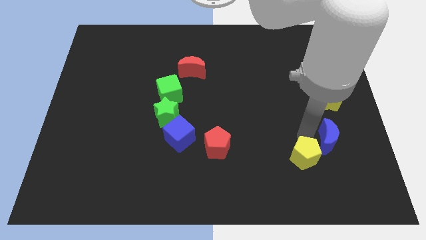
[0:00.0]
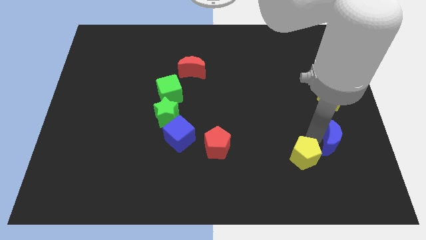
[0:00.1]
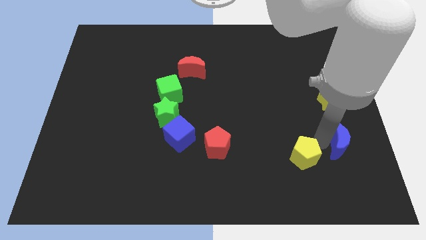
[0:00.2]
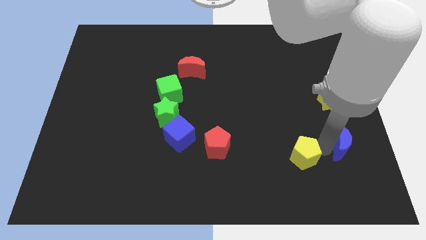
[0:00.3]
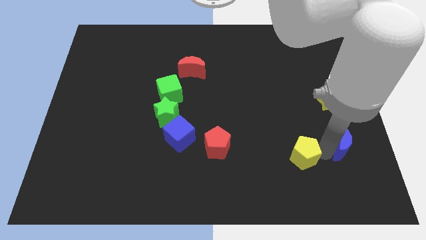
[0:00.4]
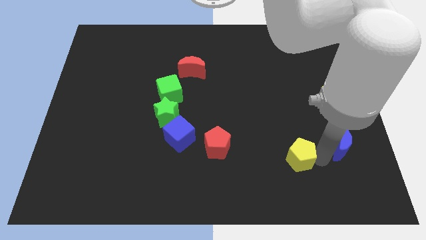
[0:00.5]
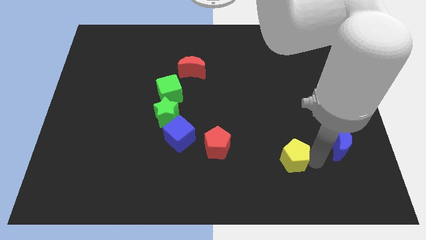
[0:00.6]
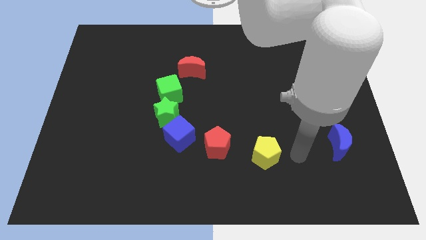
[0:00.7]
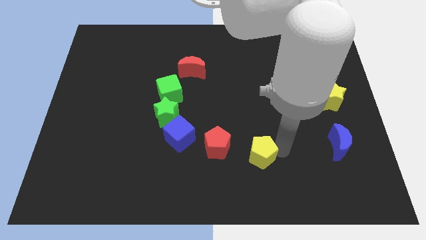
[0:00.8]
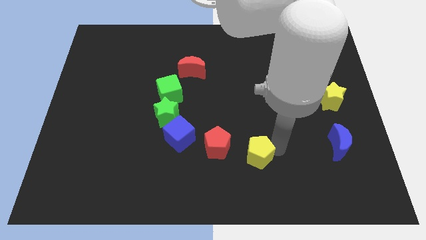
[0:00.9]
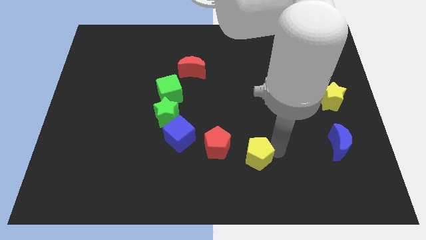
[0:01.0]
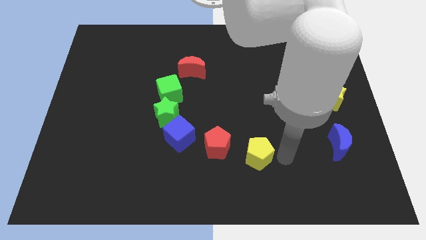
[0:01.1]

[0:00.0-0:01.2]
place the yellow pentagon to the right of the red pentagon

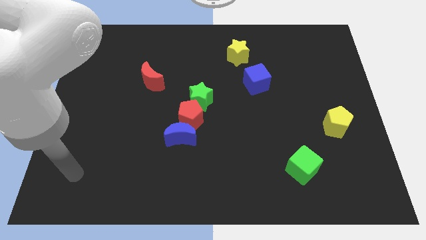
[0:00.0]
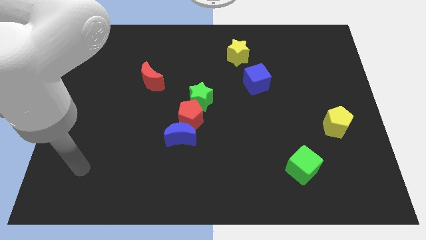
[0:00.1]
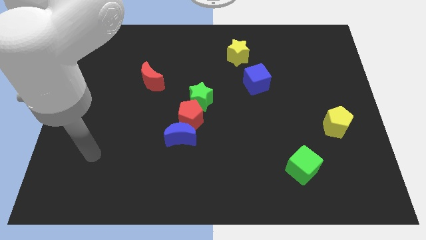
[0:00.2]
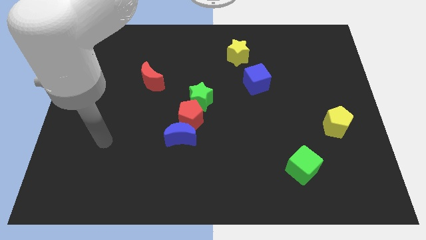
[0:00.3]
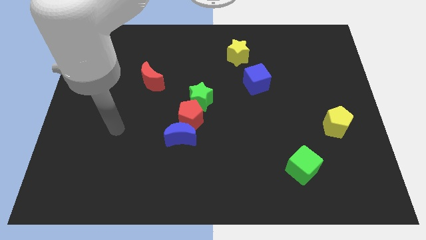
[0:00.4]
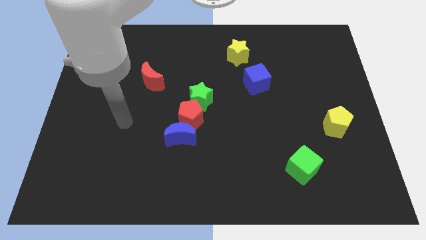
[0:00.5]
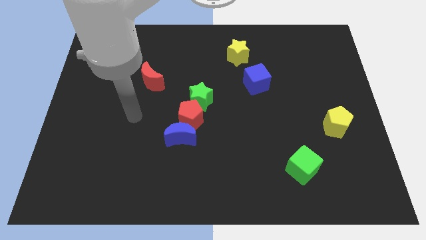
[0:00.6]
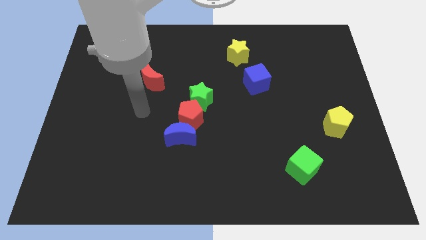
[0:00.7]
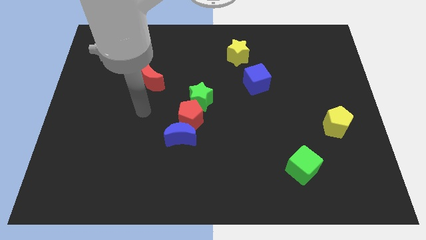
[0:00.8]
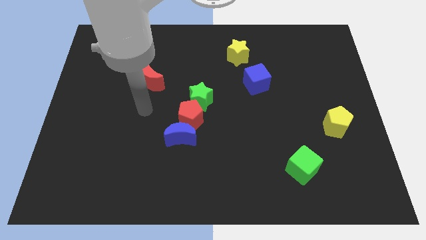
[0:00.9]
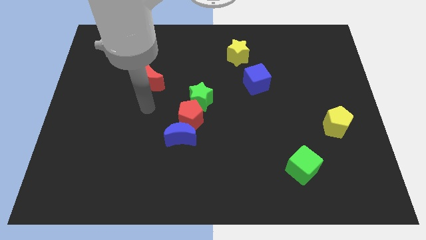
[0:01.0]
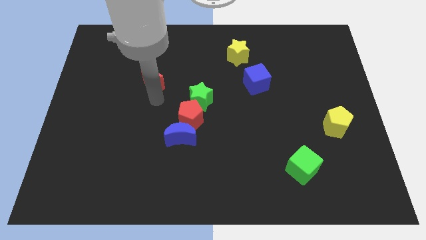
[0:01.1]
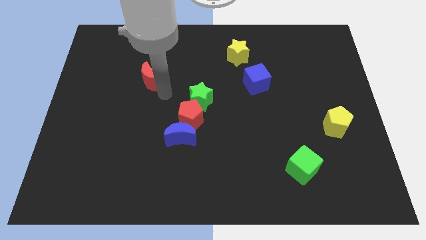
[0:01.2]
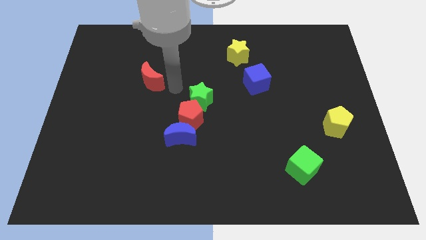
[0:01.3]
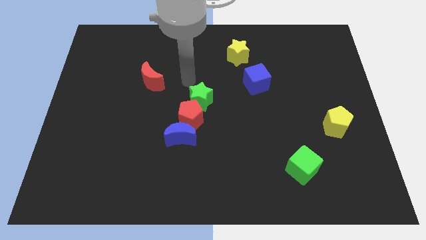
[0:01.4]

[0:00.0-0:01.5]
move close to the green star

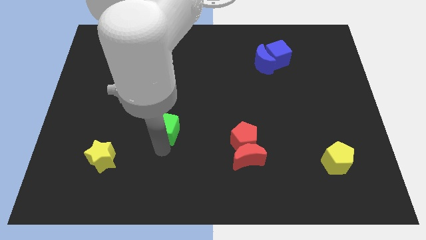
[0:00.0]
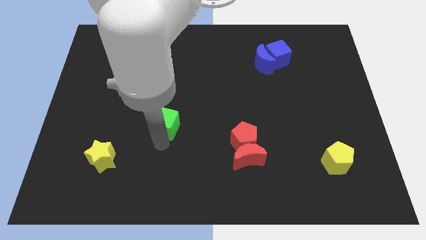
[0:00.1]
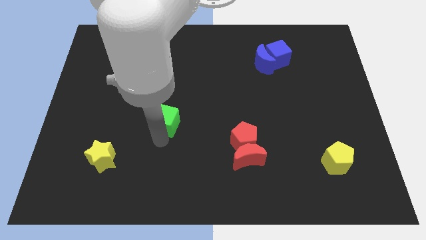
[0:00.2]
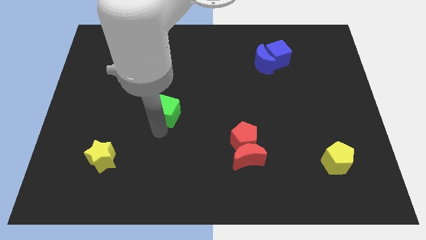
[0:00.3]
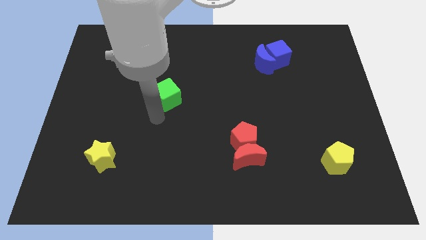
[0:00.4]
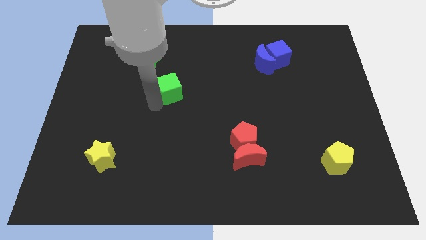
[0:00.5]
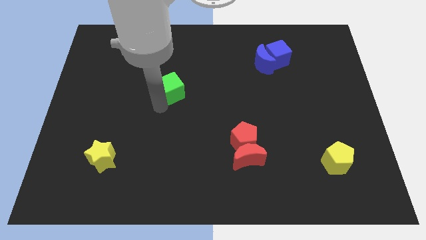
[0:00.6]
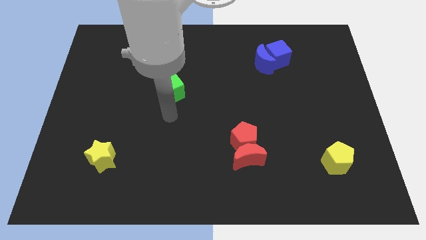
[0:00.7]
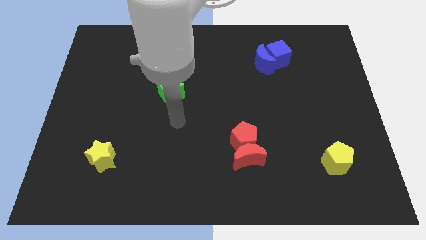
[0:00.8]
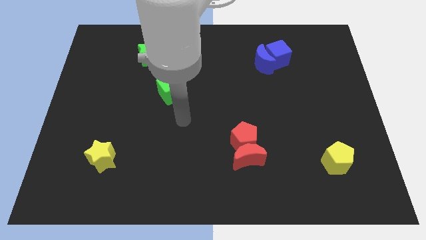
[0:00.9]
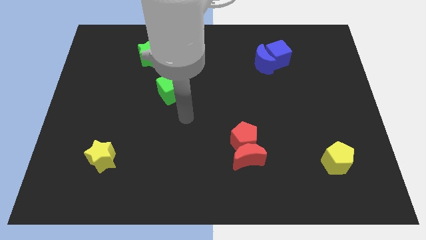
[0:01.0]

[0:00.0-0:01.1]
push the green cube towards the green star

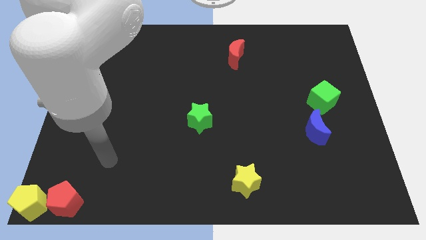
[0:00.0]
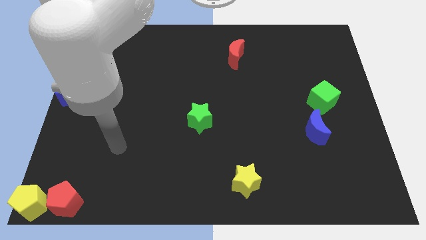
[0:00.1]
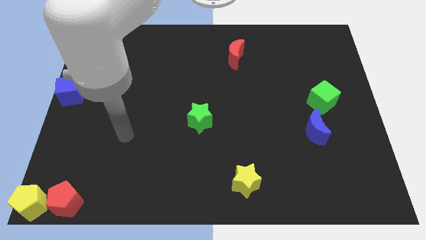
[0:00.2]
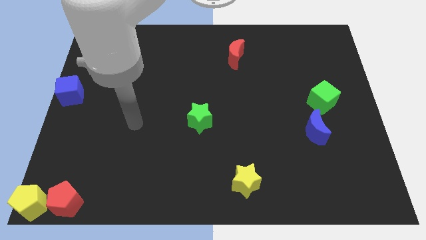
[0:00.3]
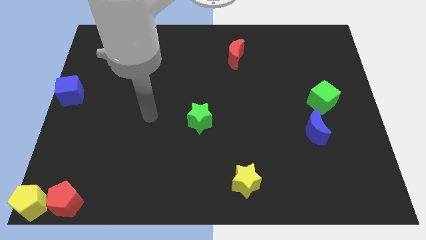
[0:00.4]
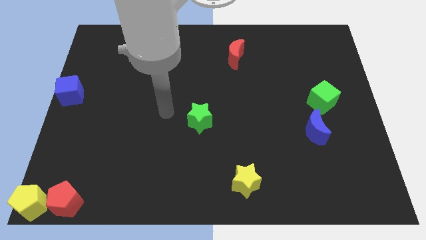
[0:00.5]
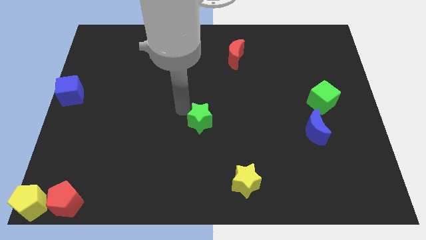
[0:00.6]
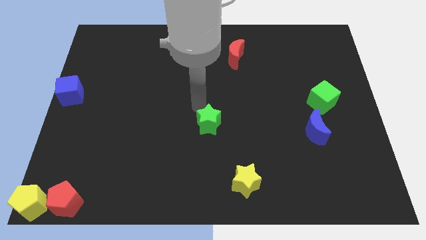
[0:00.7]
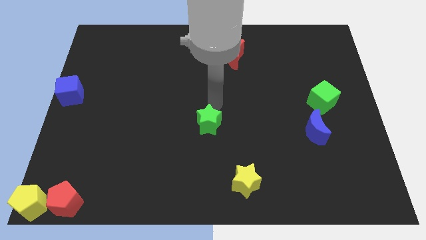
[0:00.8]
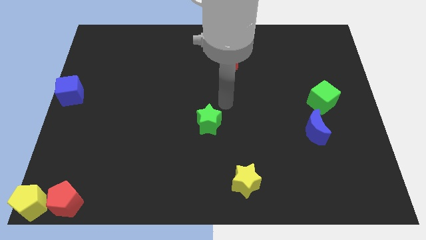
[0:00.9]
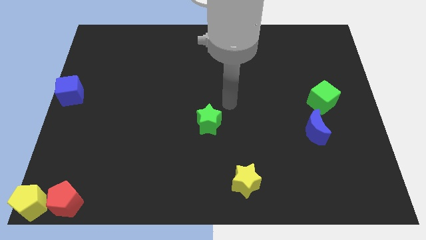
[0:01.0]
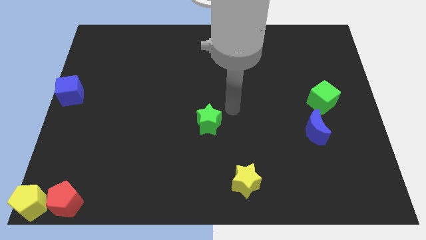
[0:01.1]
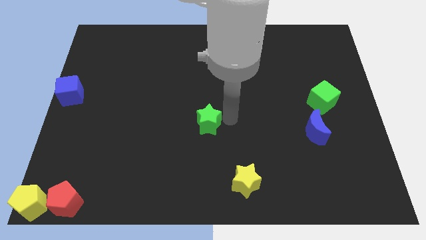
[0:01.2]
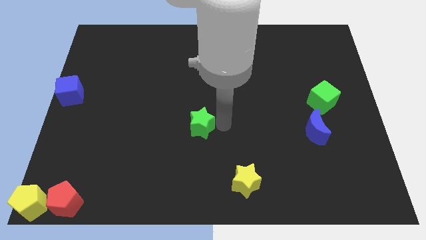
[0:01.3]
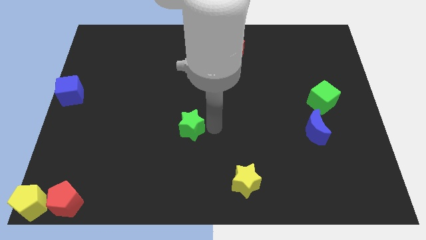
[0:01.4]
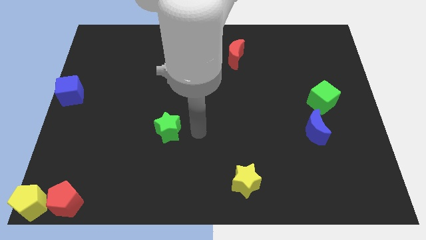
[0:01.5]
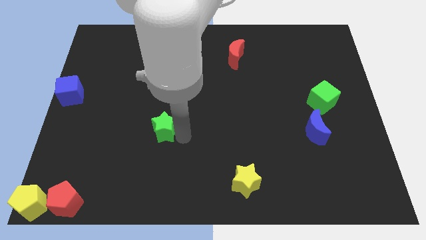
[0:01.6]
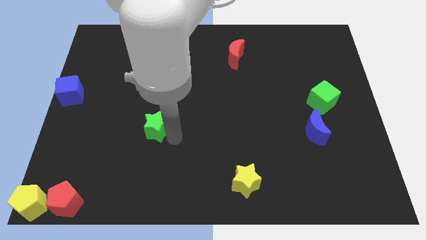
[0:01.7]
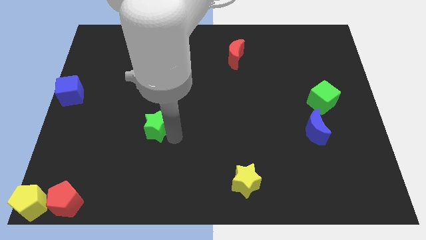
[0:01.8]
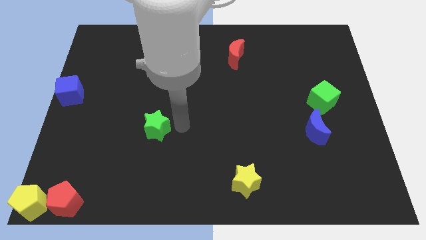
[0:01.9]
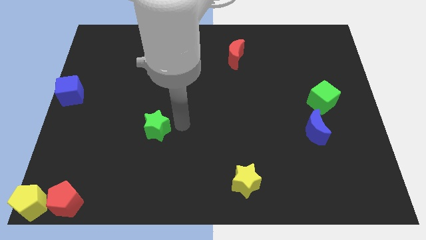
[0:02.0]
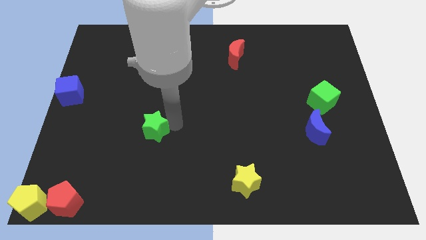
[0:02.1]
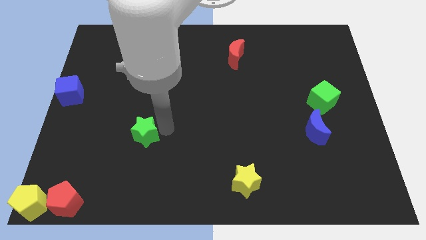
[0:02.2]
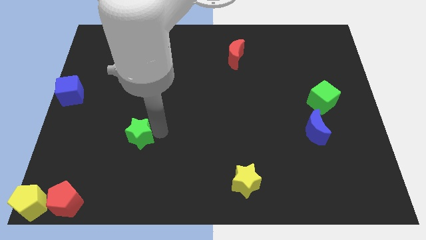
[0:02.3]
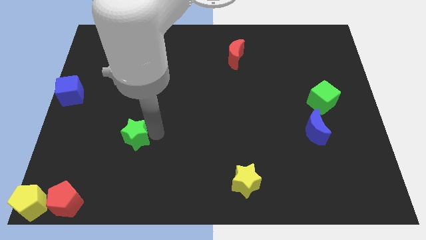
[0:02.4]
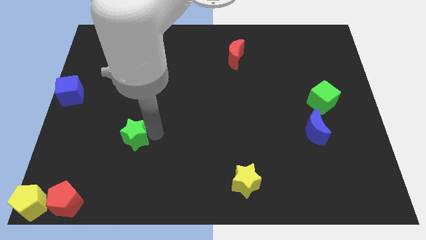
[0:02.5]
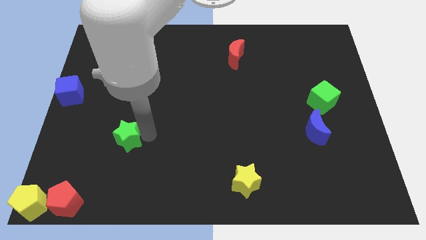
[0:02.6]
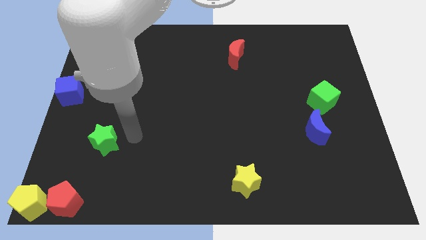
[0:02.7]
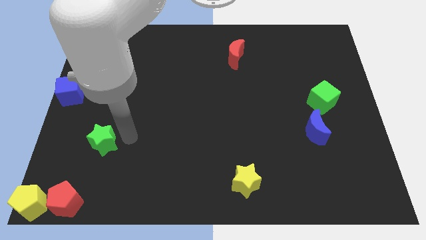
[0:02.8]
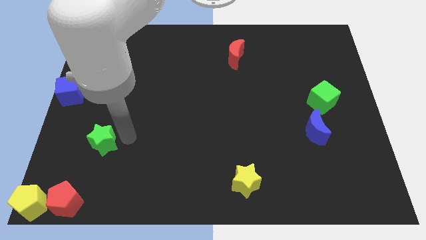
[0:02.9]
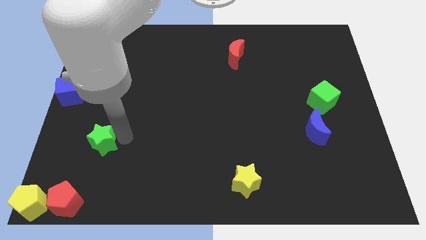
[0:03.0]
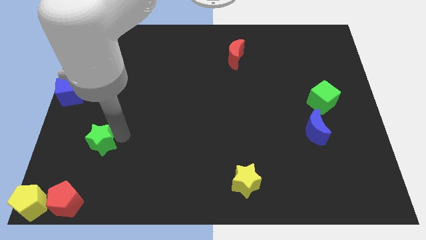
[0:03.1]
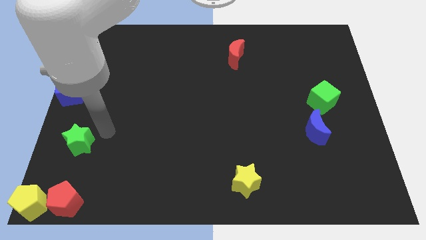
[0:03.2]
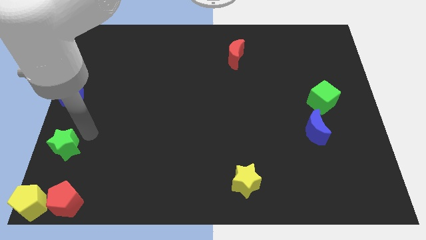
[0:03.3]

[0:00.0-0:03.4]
slightly push the green star towards the left side of the board

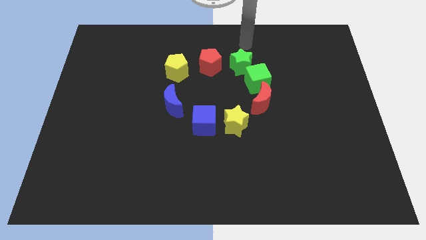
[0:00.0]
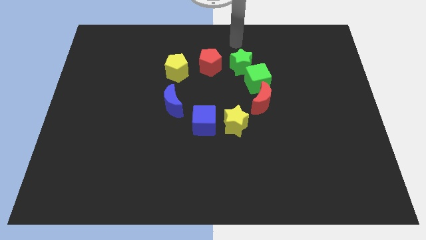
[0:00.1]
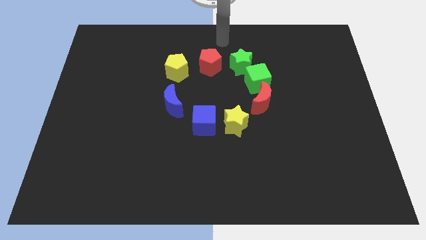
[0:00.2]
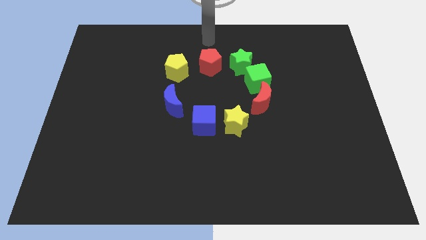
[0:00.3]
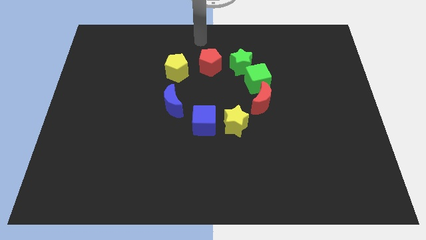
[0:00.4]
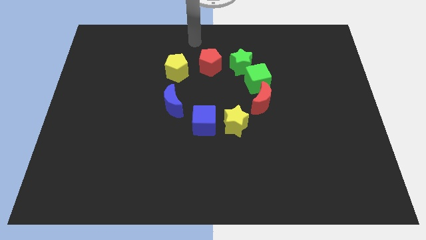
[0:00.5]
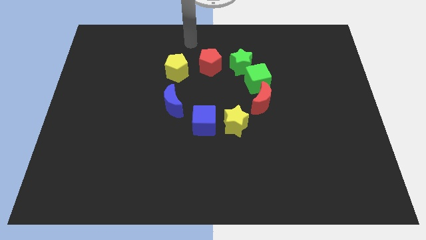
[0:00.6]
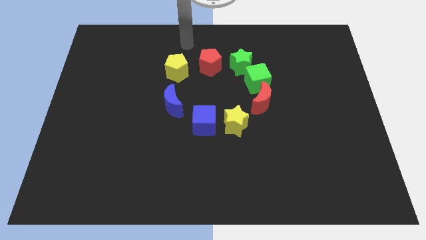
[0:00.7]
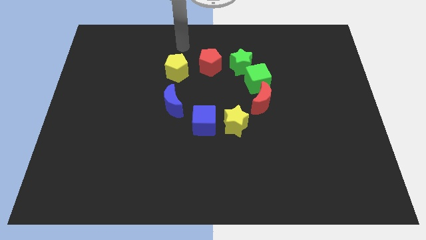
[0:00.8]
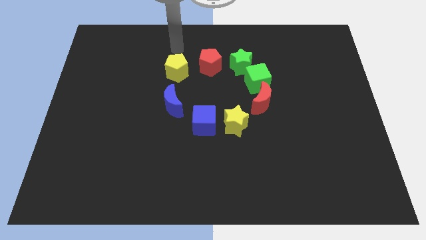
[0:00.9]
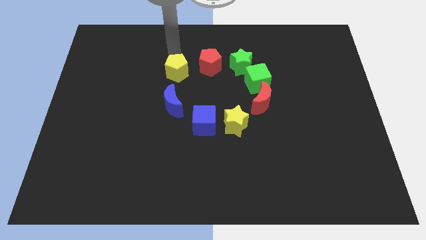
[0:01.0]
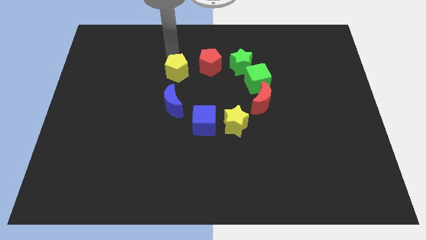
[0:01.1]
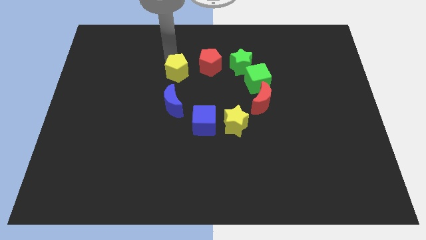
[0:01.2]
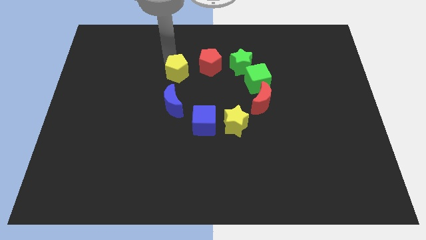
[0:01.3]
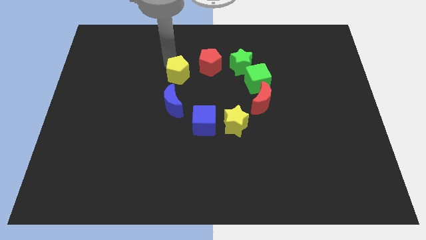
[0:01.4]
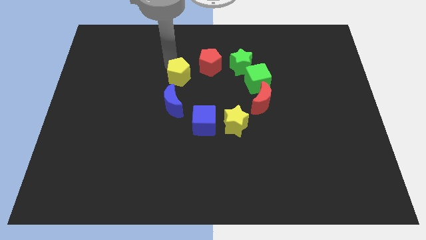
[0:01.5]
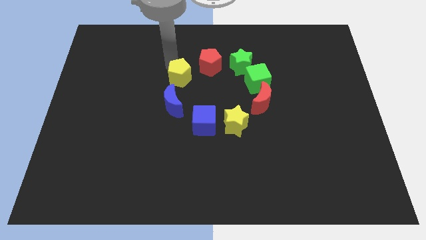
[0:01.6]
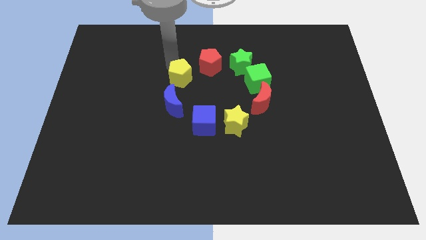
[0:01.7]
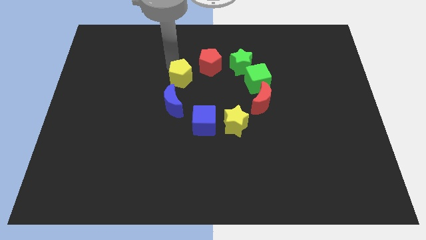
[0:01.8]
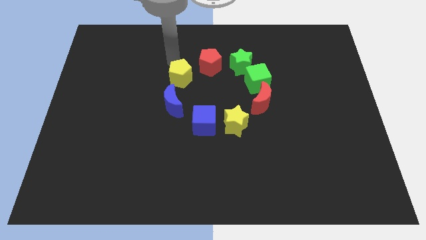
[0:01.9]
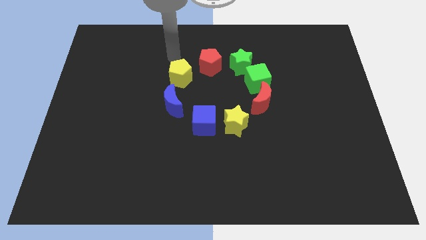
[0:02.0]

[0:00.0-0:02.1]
push the yellow pentagon close to the blue moon
